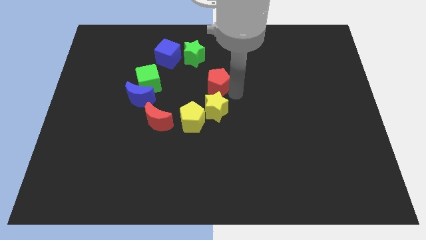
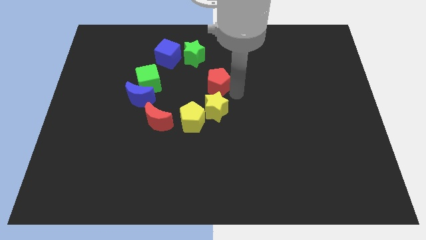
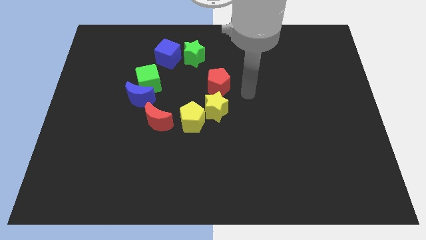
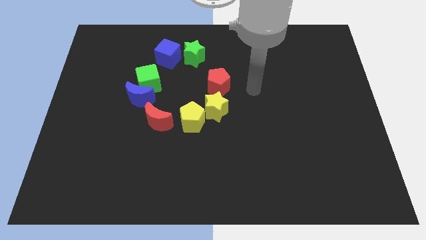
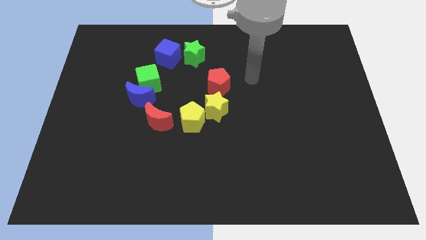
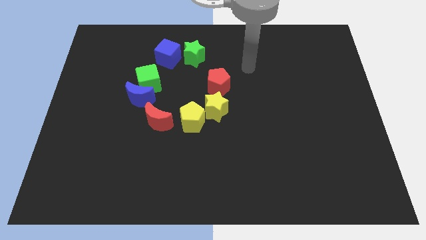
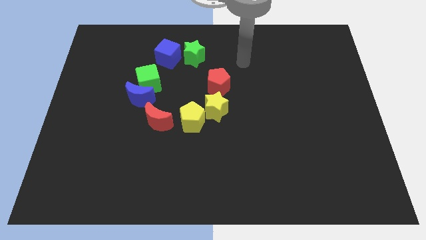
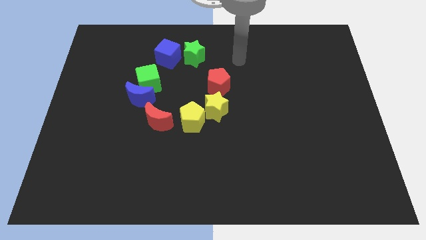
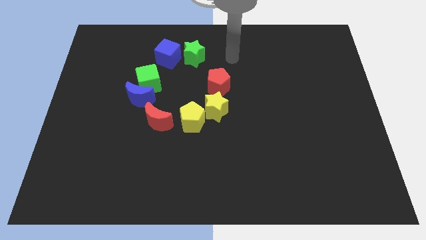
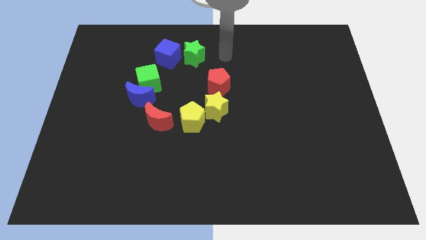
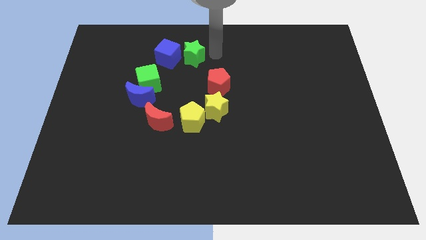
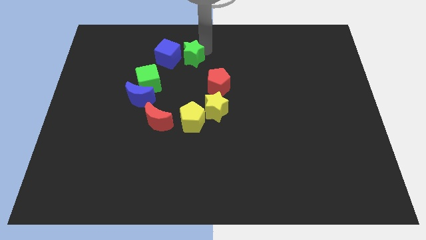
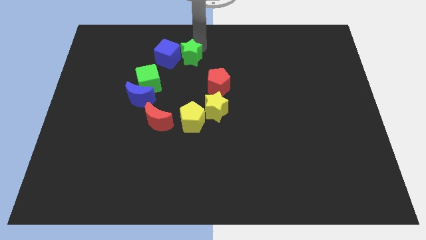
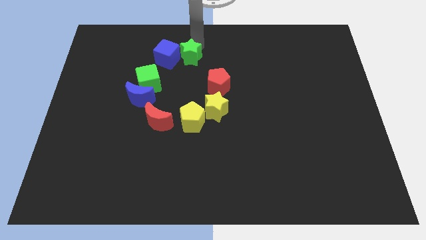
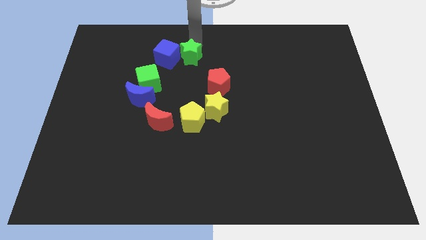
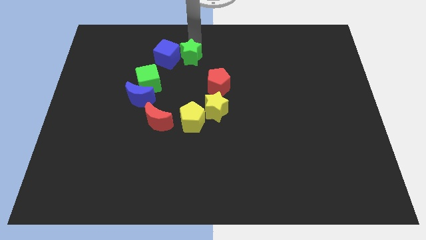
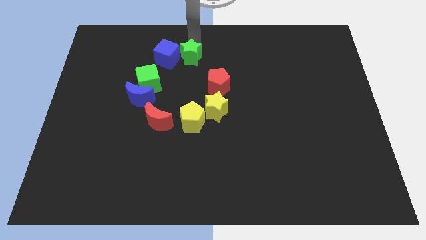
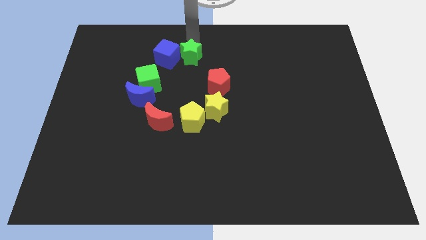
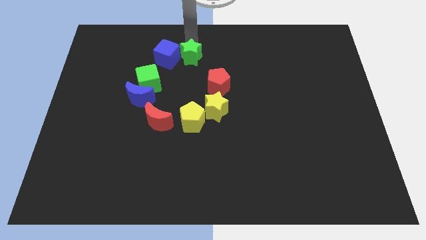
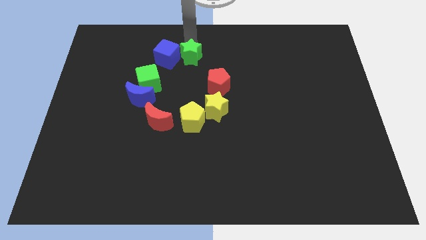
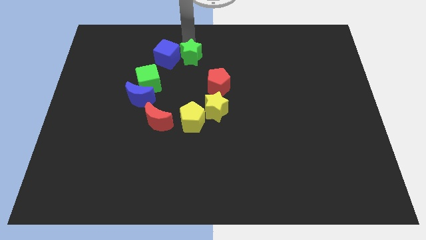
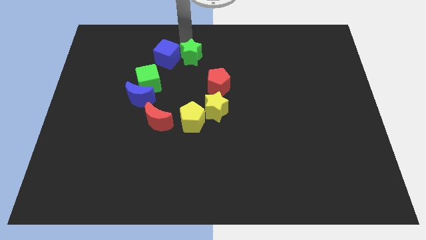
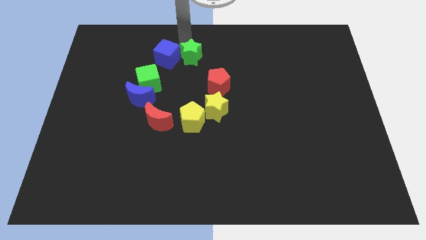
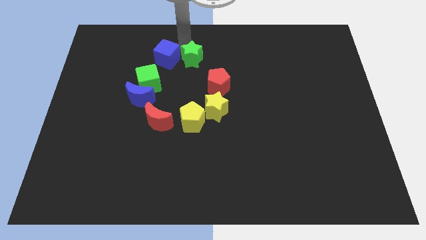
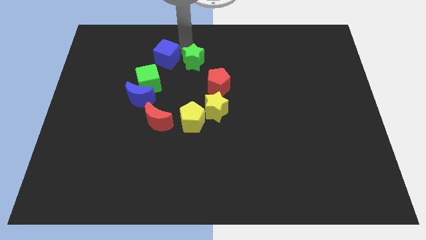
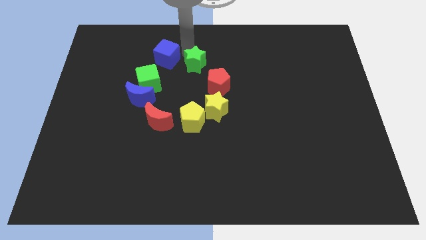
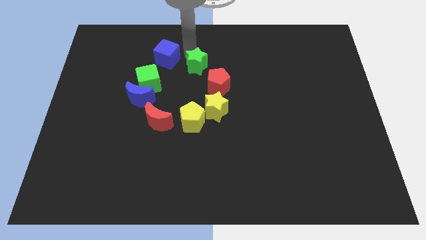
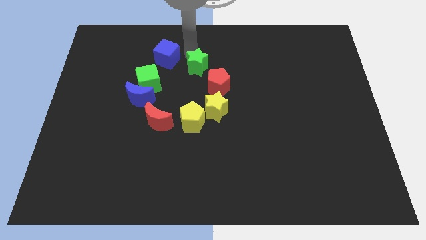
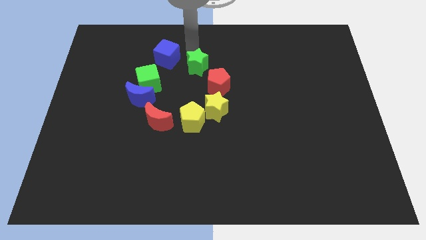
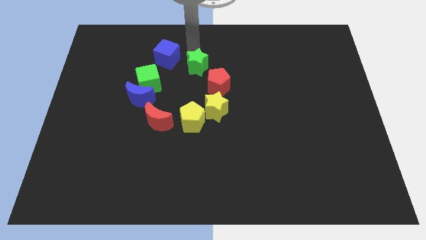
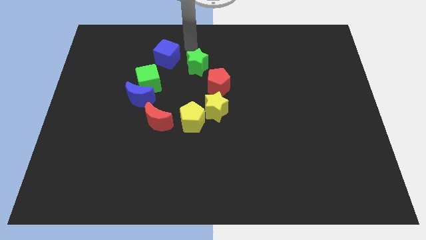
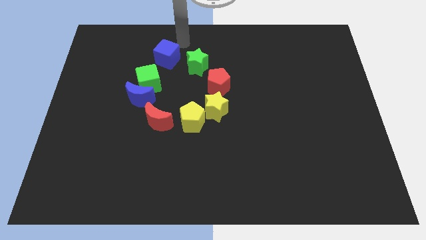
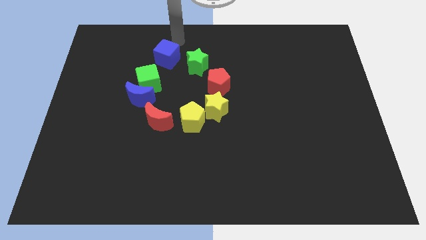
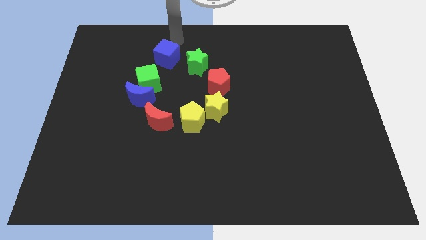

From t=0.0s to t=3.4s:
move the green star slightly to the bottom

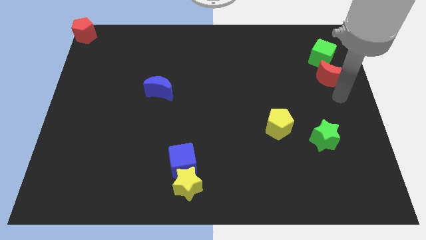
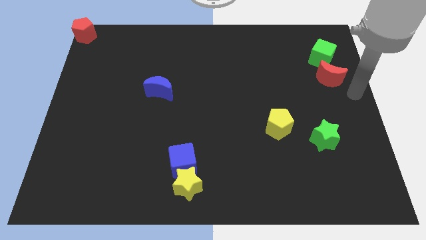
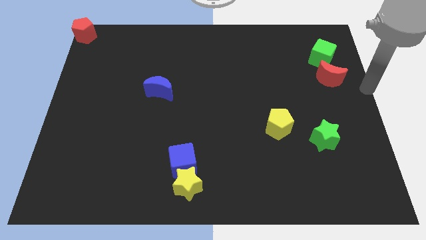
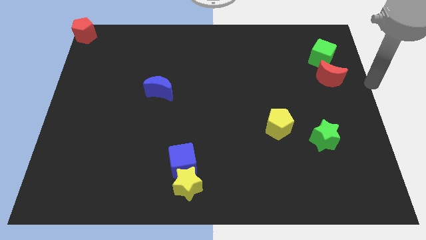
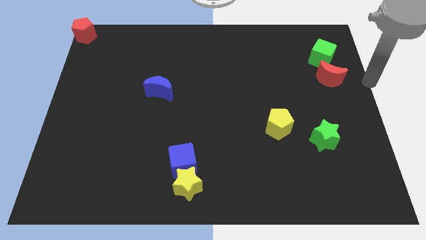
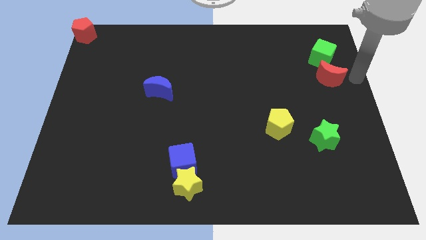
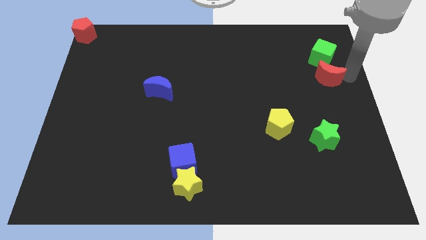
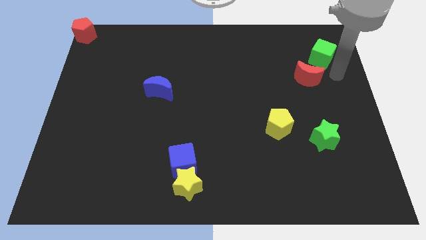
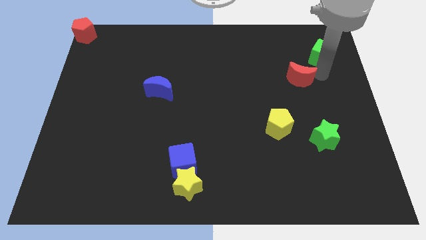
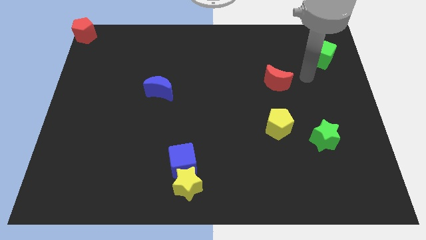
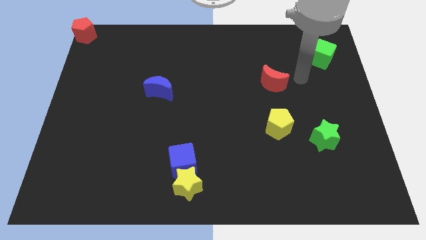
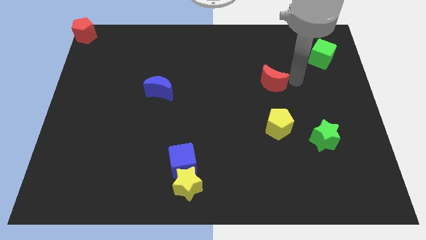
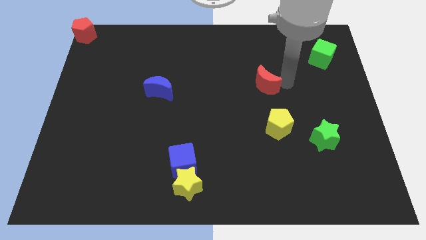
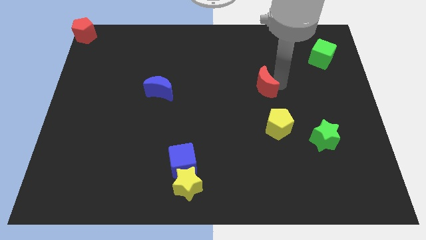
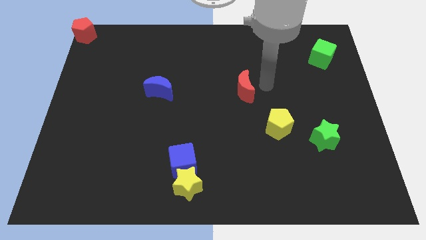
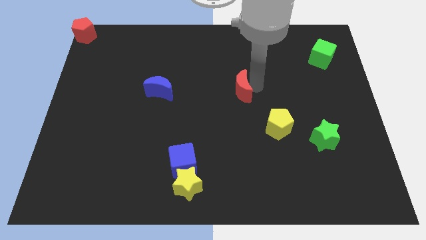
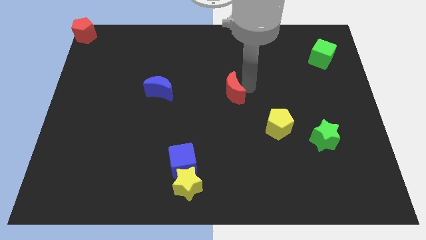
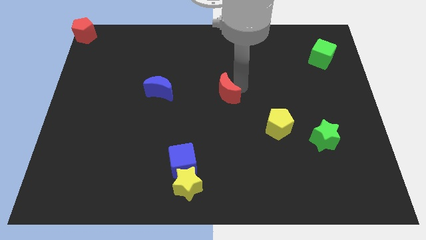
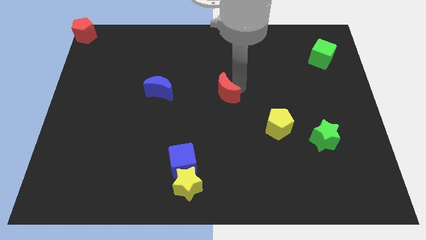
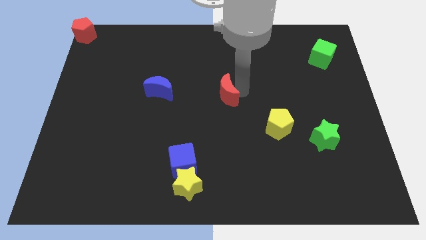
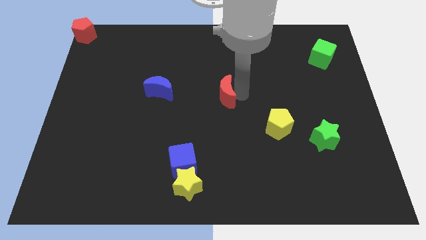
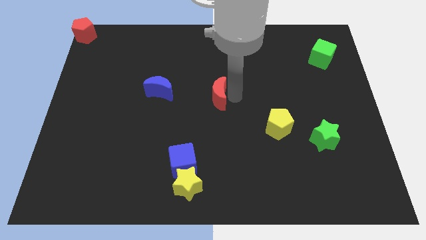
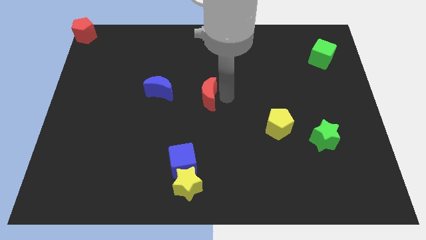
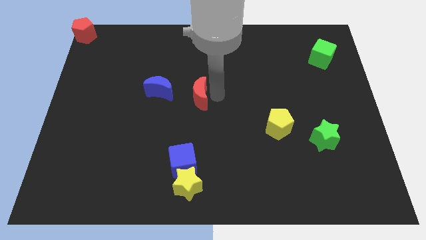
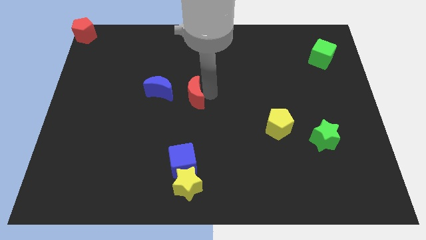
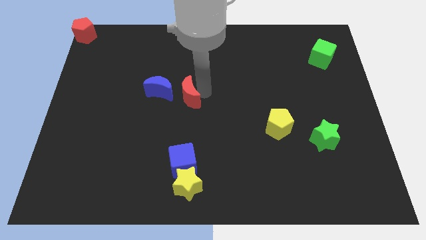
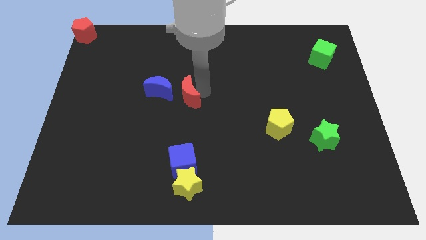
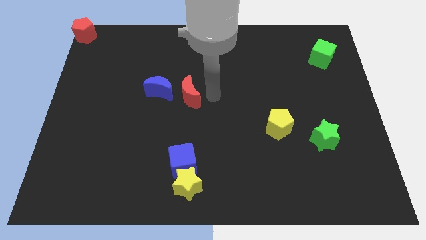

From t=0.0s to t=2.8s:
separate the red moon from the green cube

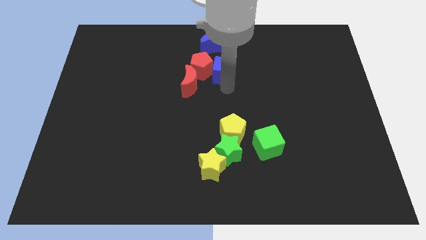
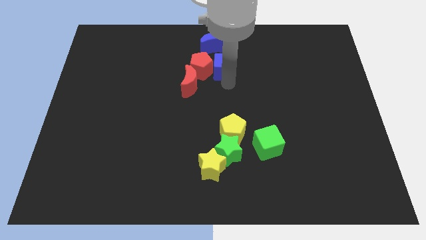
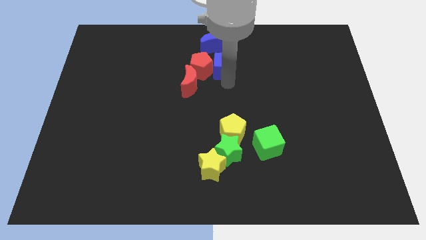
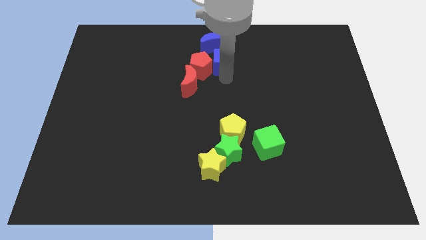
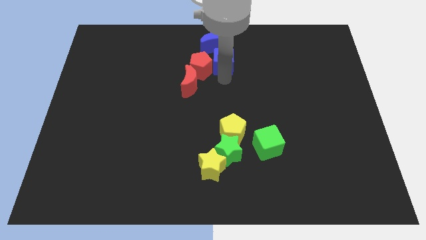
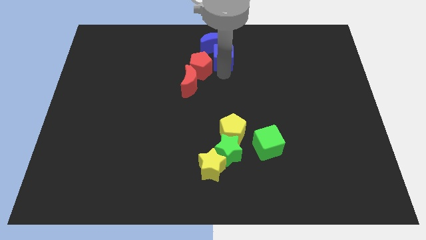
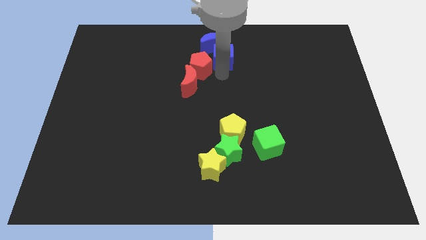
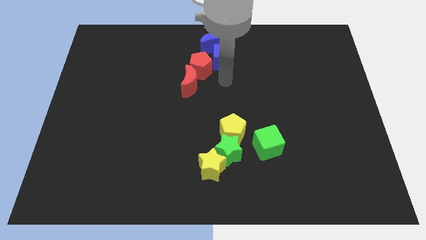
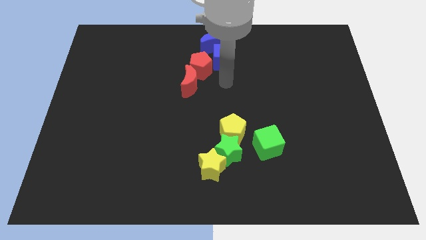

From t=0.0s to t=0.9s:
place blue cube below red crescent

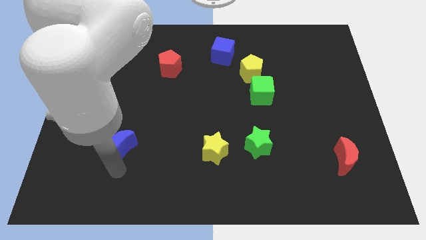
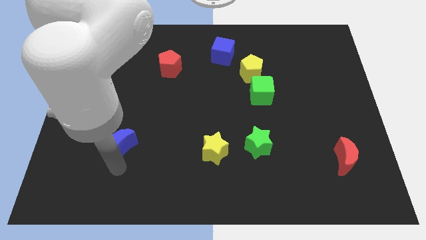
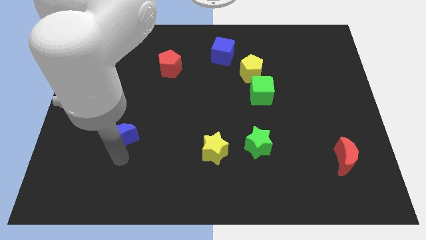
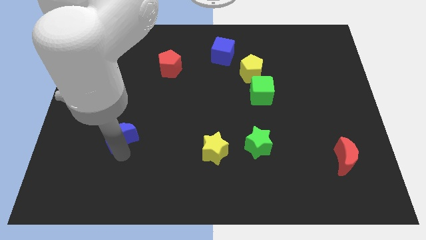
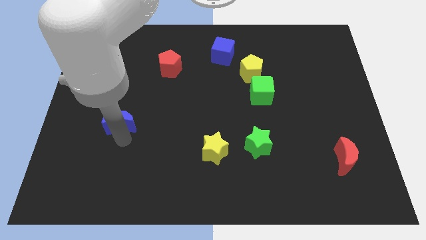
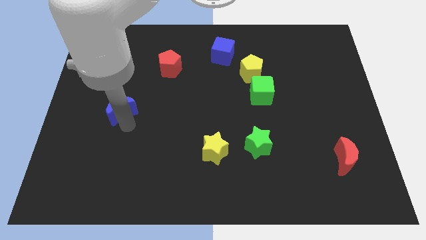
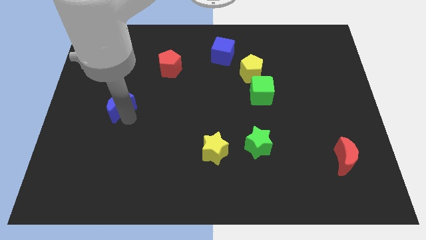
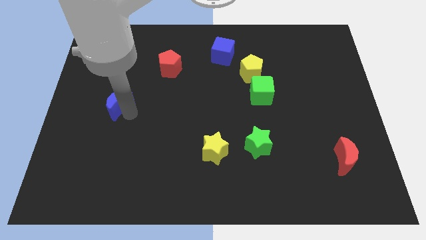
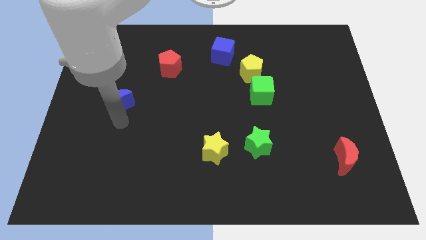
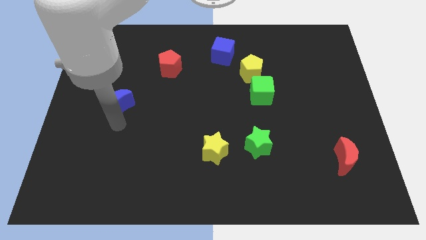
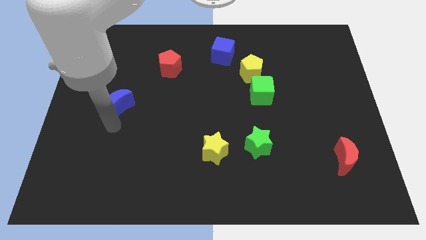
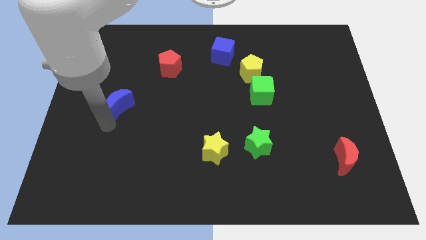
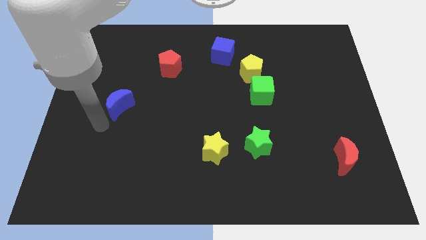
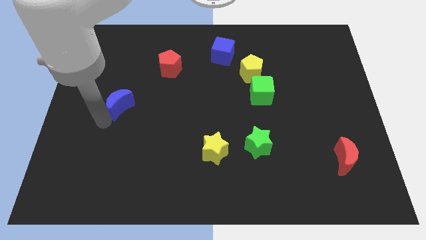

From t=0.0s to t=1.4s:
place the blue moon diagonally to the red pentagon

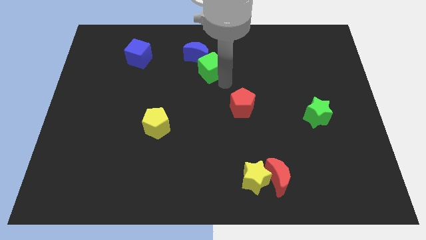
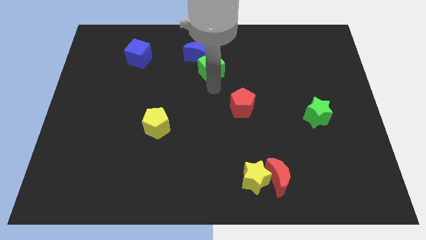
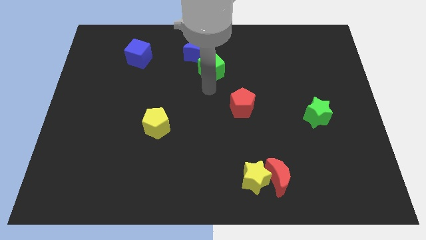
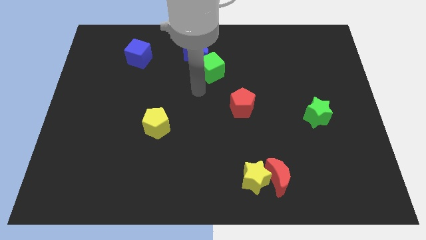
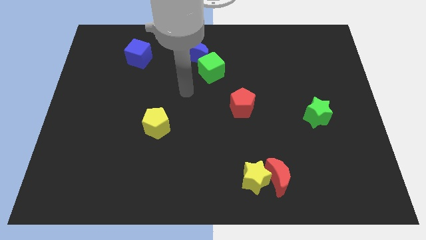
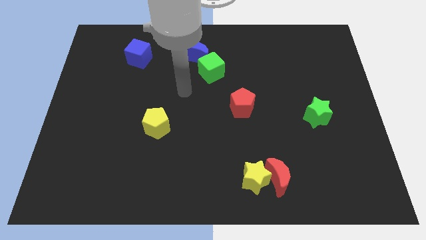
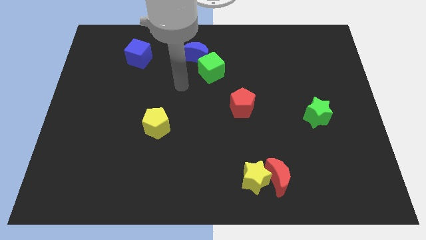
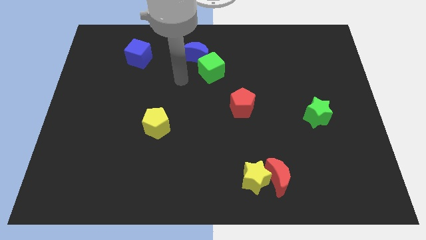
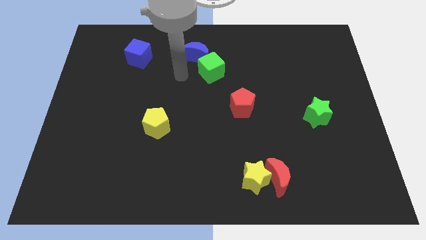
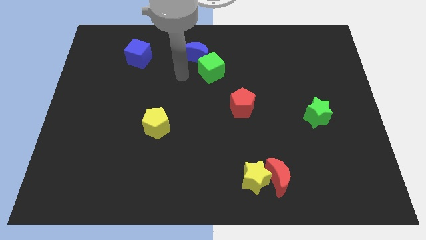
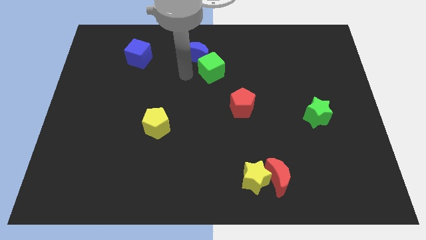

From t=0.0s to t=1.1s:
place arm close to green cube
